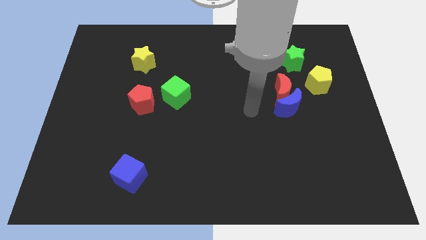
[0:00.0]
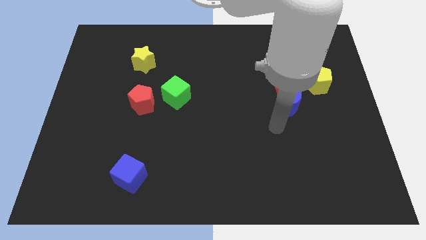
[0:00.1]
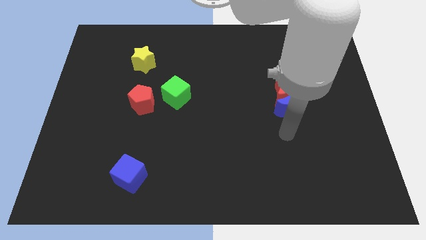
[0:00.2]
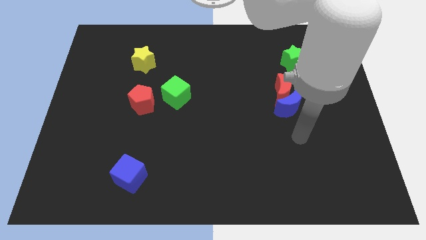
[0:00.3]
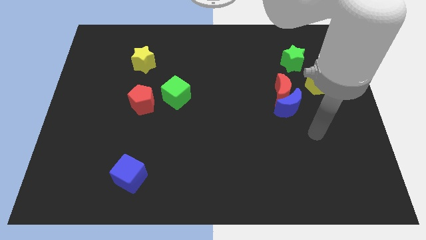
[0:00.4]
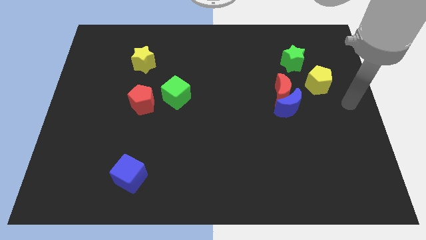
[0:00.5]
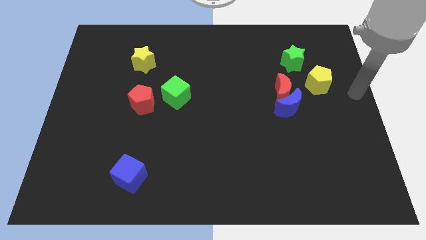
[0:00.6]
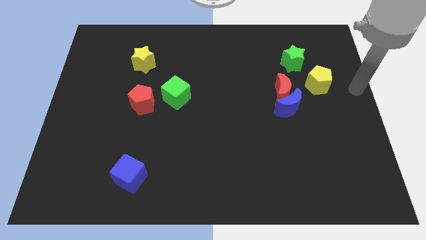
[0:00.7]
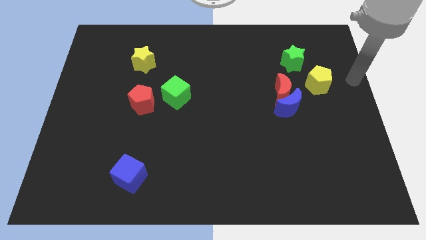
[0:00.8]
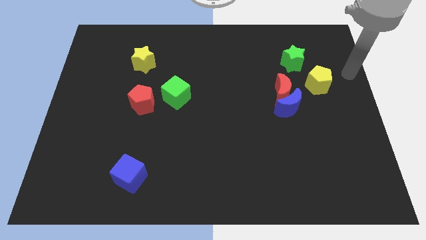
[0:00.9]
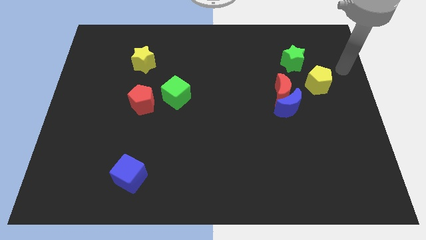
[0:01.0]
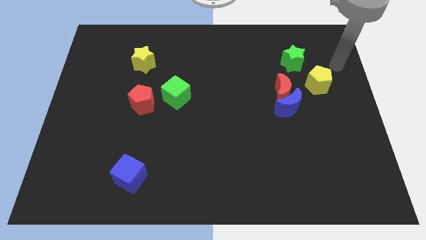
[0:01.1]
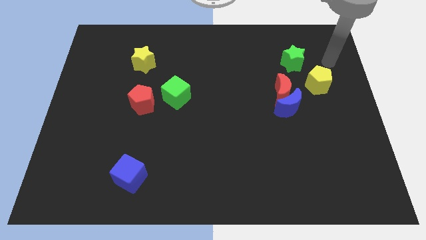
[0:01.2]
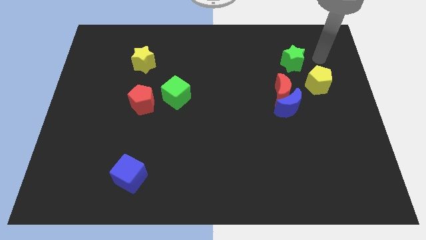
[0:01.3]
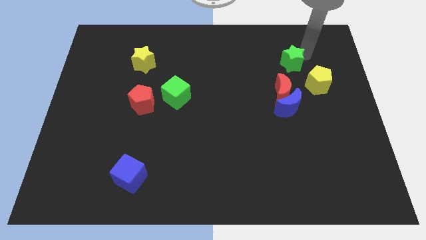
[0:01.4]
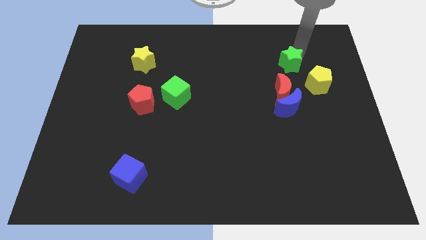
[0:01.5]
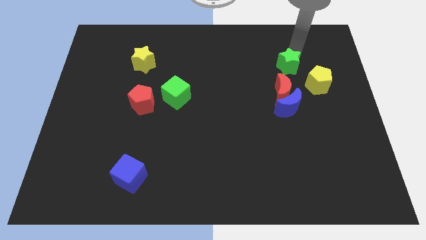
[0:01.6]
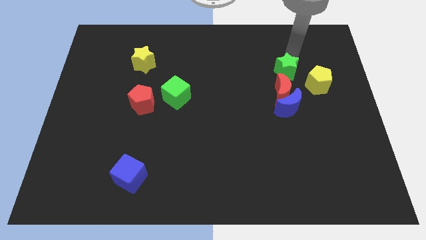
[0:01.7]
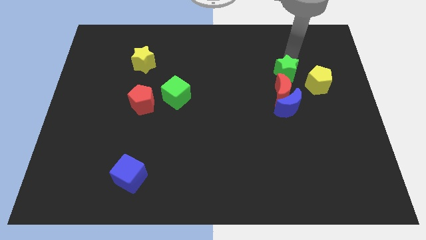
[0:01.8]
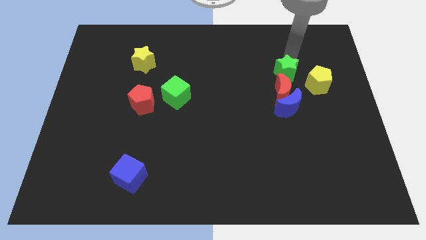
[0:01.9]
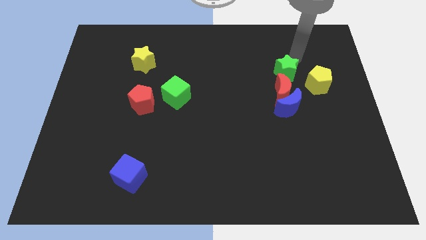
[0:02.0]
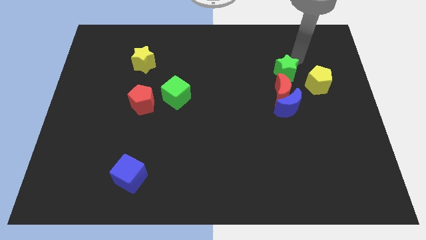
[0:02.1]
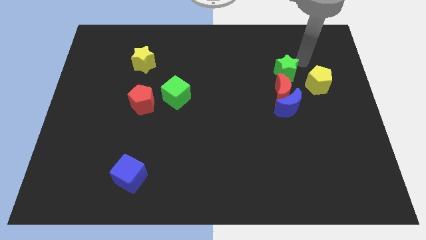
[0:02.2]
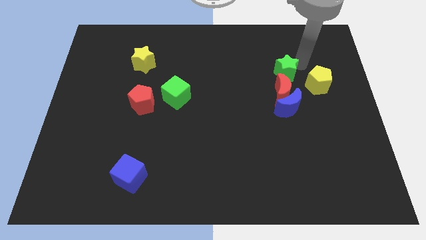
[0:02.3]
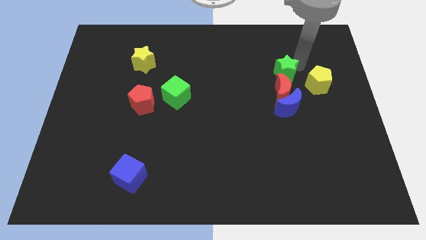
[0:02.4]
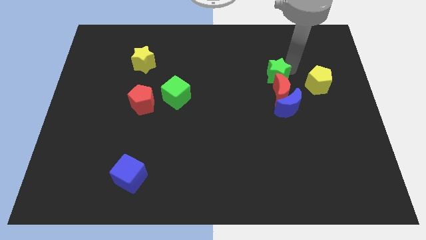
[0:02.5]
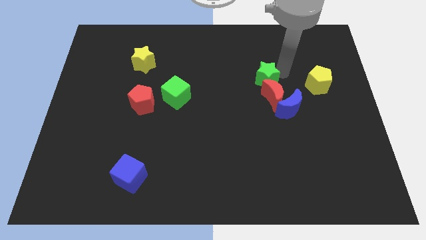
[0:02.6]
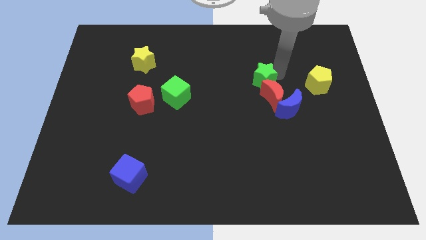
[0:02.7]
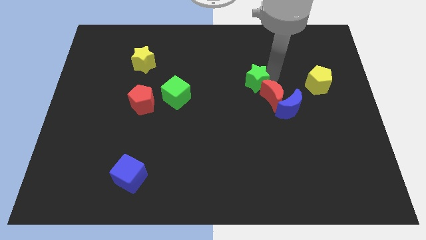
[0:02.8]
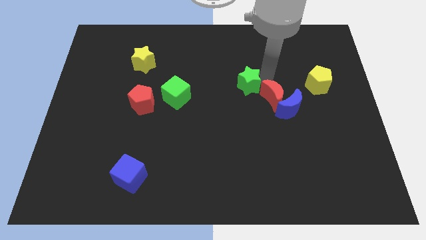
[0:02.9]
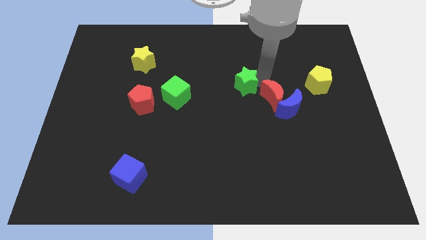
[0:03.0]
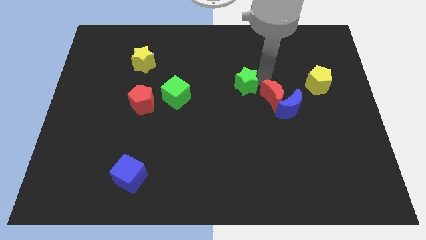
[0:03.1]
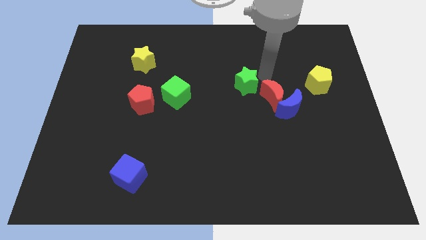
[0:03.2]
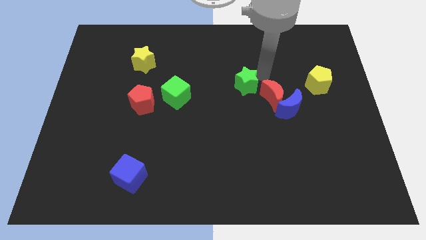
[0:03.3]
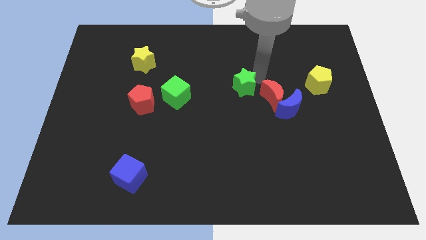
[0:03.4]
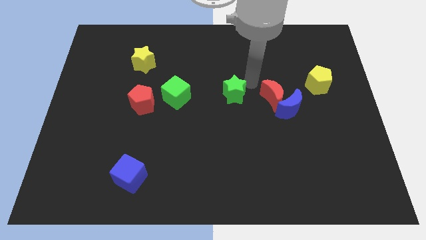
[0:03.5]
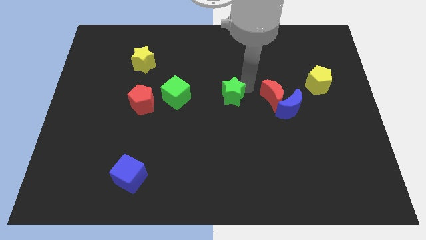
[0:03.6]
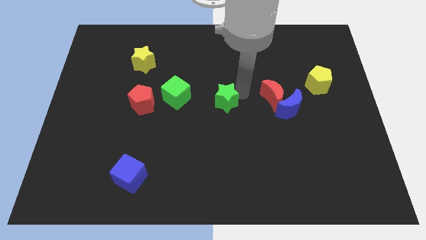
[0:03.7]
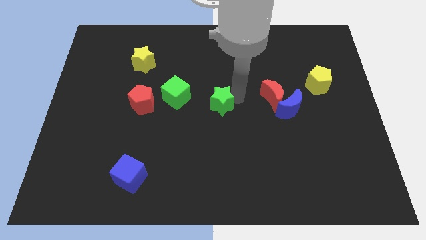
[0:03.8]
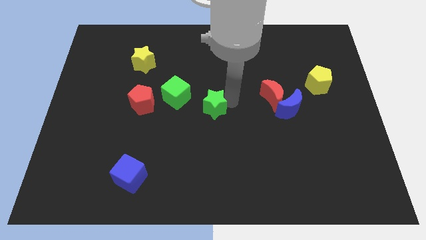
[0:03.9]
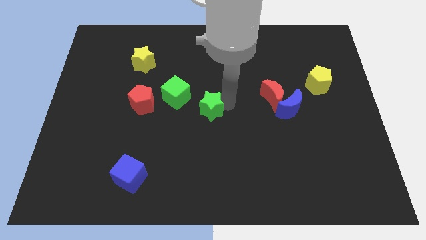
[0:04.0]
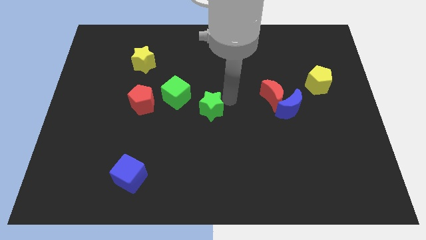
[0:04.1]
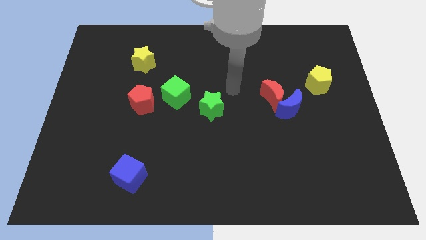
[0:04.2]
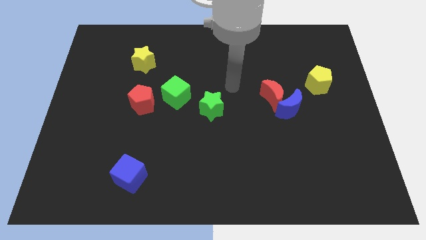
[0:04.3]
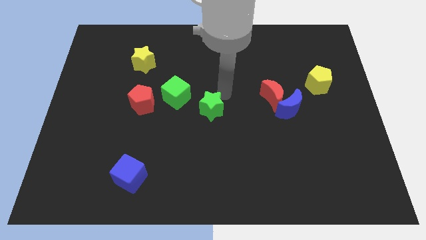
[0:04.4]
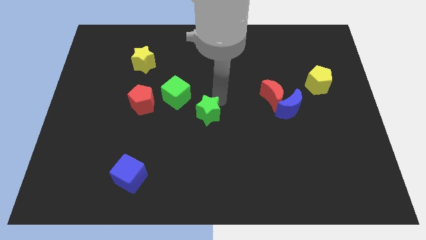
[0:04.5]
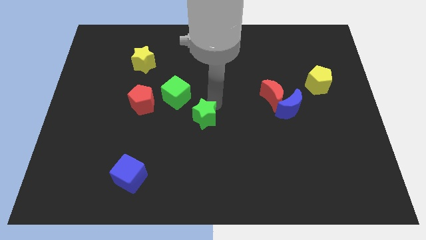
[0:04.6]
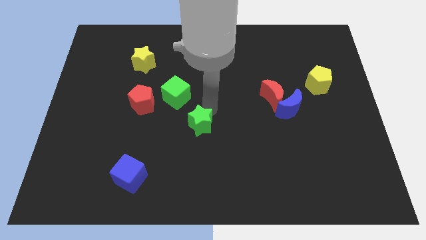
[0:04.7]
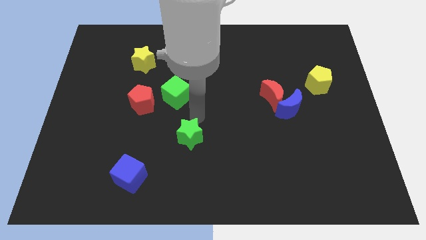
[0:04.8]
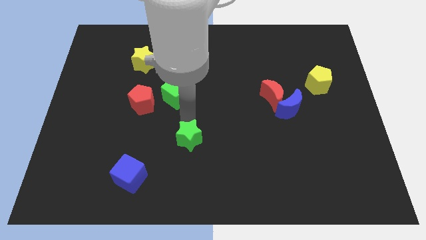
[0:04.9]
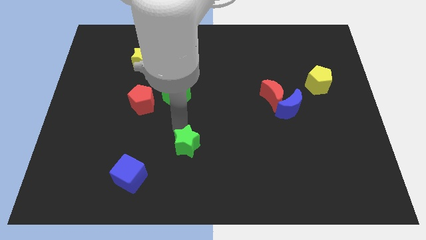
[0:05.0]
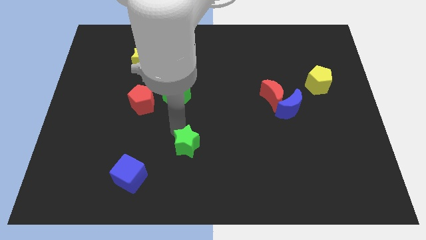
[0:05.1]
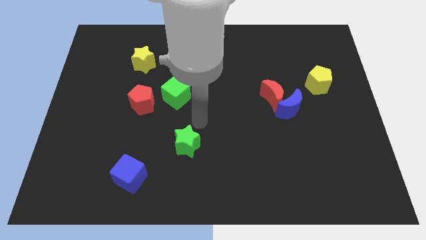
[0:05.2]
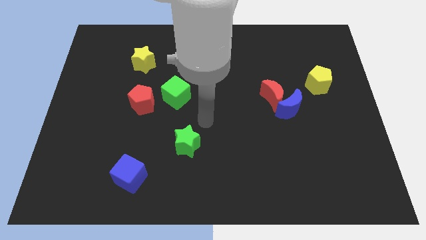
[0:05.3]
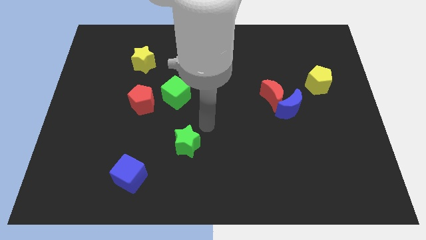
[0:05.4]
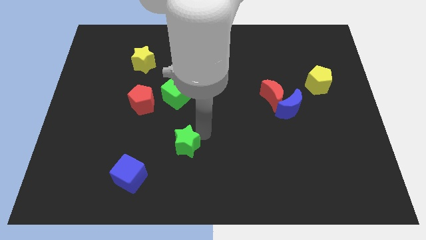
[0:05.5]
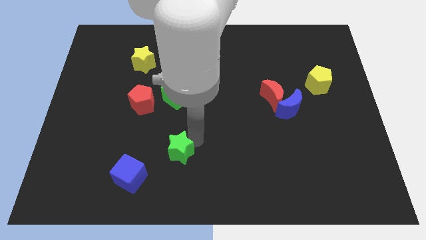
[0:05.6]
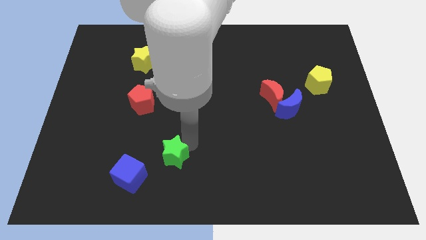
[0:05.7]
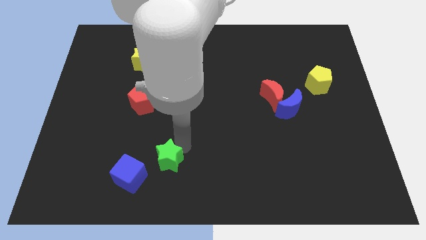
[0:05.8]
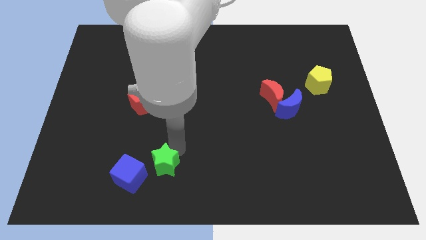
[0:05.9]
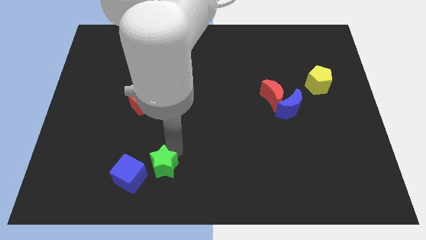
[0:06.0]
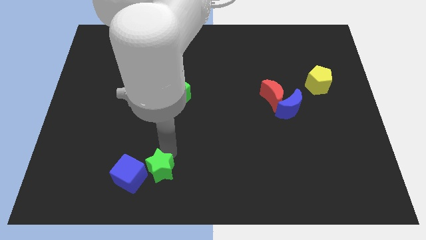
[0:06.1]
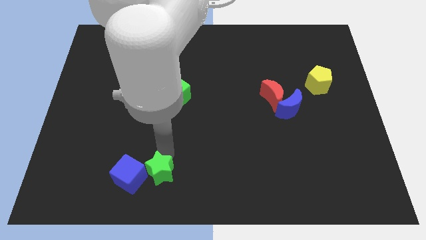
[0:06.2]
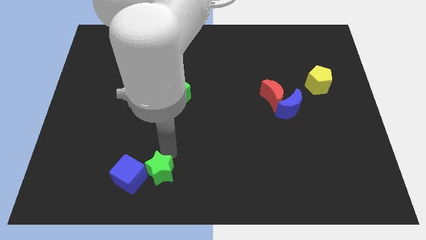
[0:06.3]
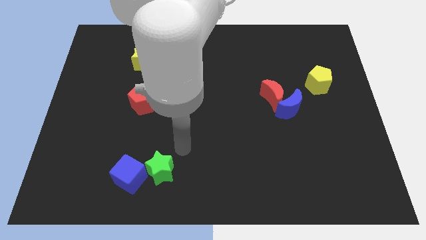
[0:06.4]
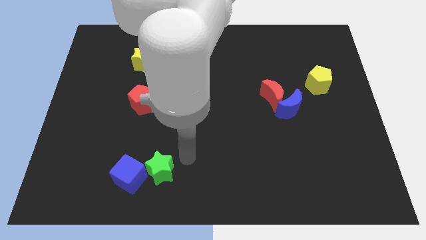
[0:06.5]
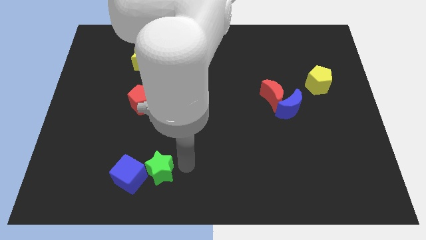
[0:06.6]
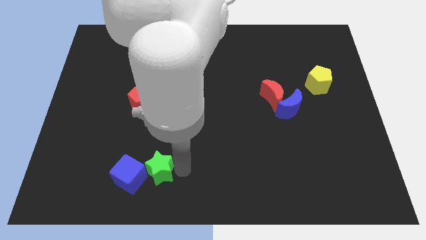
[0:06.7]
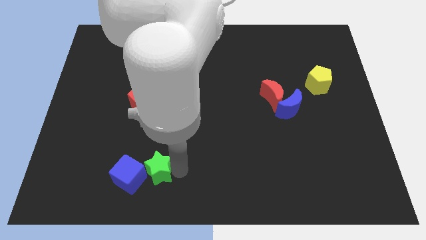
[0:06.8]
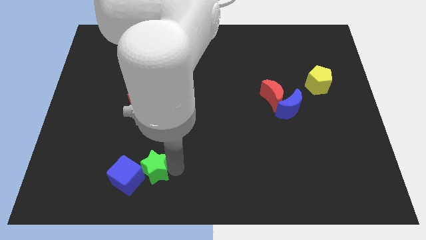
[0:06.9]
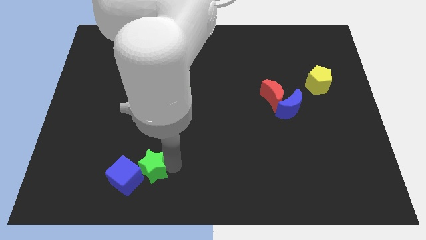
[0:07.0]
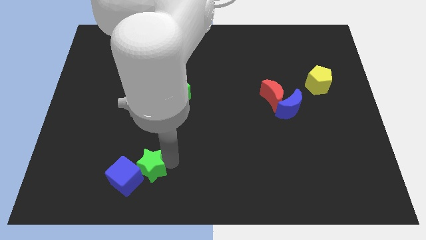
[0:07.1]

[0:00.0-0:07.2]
move the green star to the blue cube

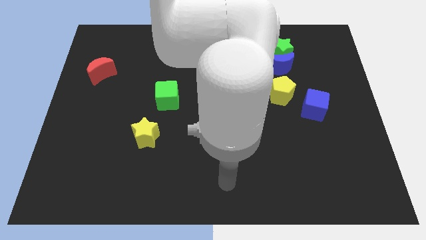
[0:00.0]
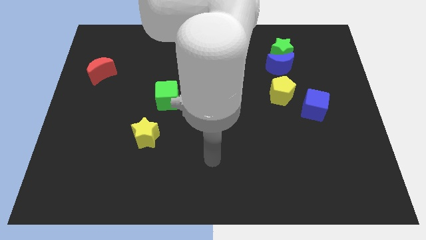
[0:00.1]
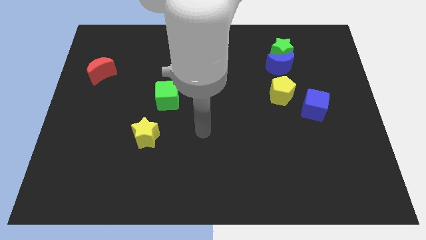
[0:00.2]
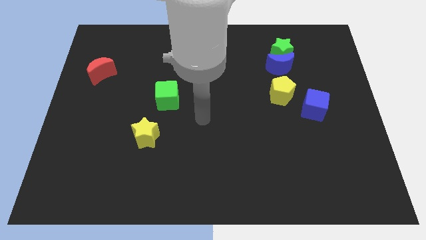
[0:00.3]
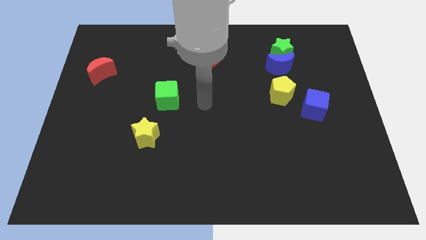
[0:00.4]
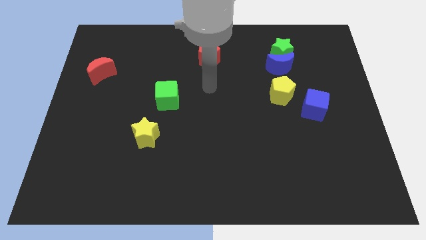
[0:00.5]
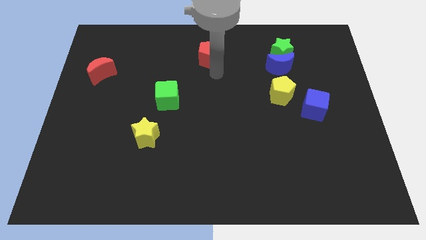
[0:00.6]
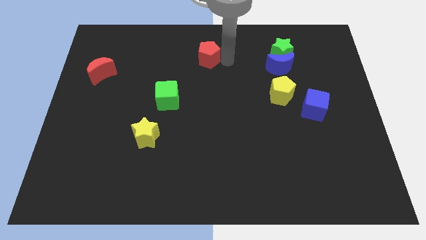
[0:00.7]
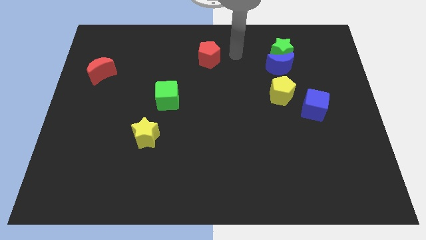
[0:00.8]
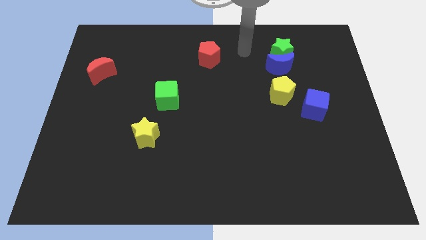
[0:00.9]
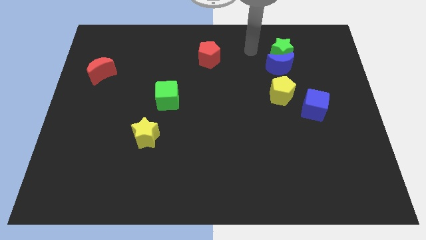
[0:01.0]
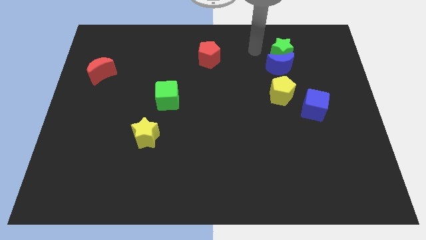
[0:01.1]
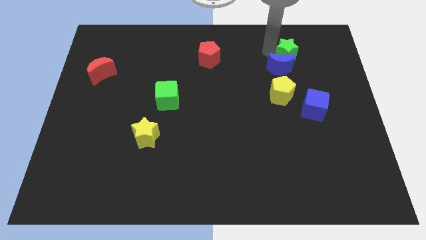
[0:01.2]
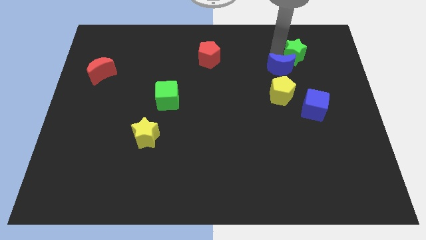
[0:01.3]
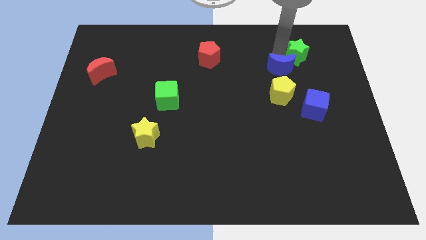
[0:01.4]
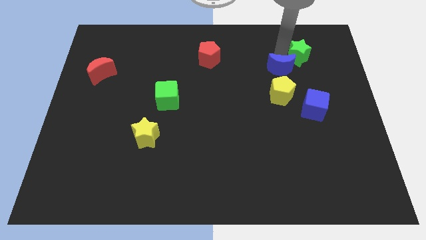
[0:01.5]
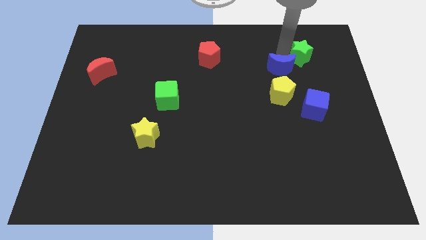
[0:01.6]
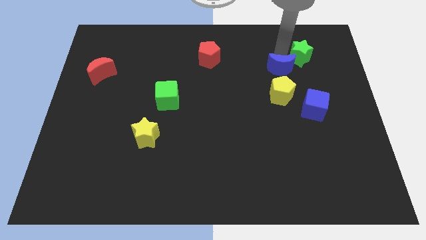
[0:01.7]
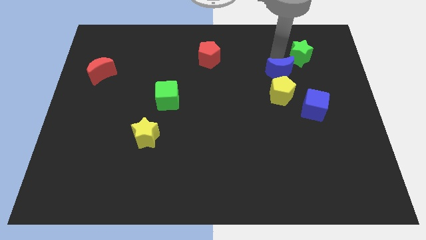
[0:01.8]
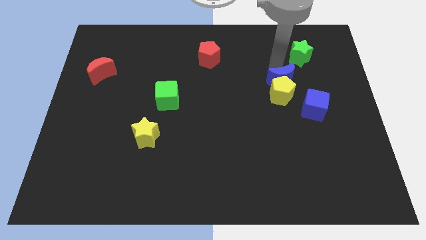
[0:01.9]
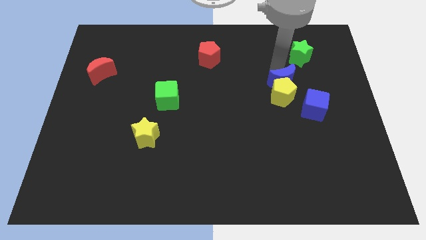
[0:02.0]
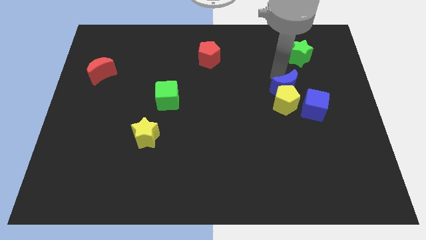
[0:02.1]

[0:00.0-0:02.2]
move the blue moon close to the yellow pentagon
